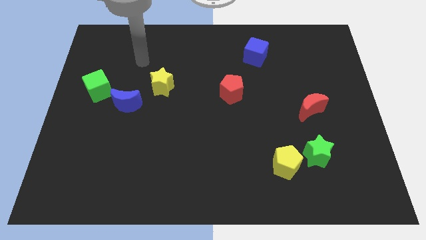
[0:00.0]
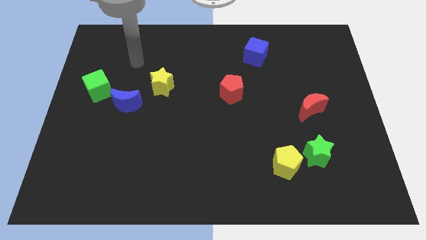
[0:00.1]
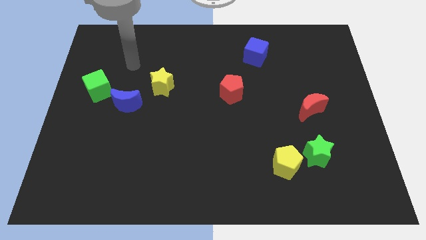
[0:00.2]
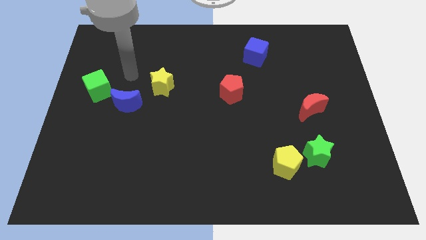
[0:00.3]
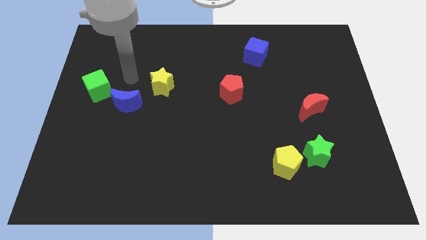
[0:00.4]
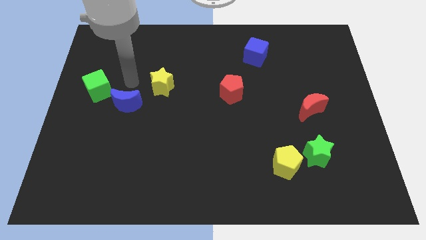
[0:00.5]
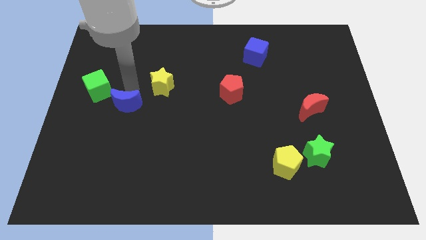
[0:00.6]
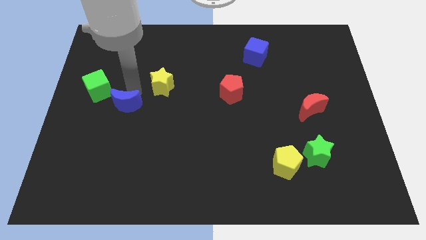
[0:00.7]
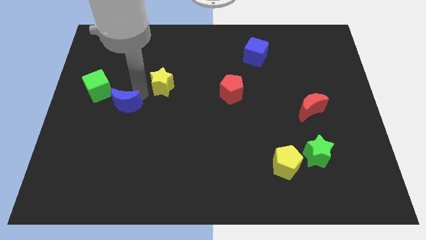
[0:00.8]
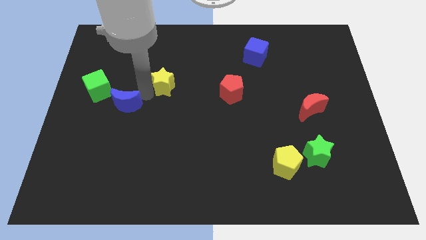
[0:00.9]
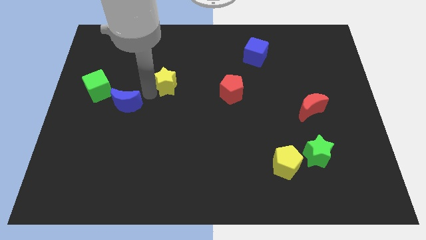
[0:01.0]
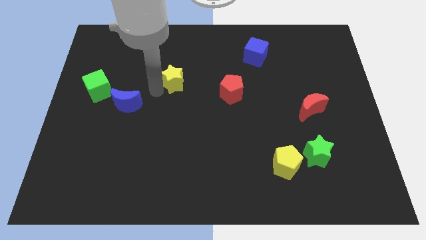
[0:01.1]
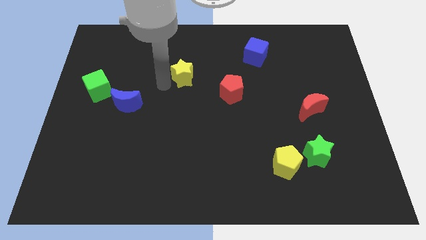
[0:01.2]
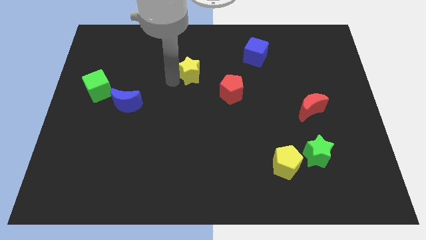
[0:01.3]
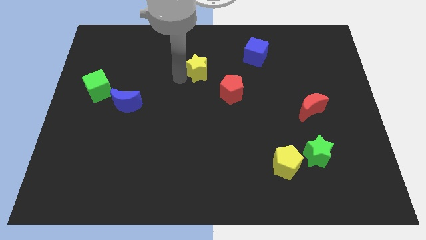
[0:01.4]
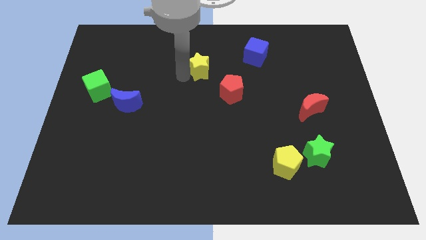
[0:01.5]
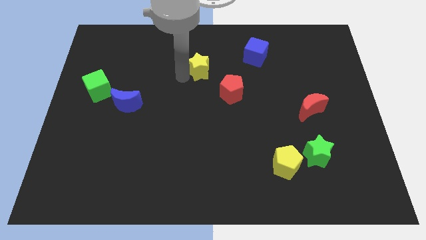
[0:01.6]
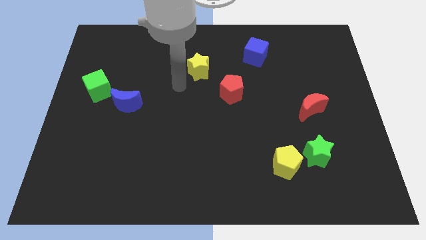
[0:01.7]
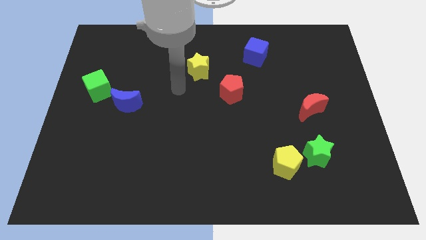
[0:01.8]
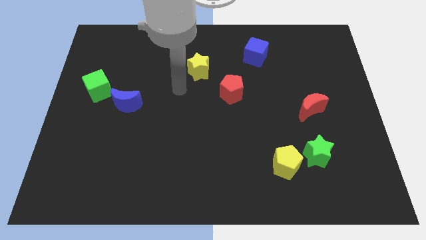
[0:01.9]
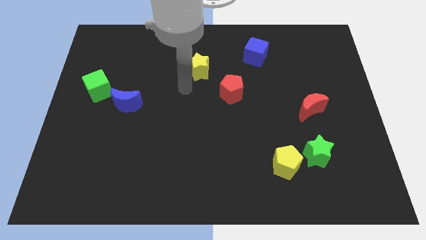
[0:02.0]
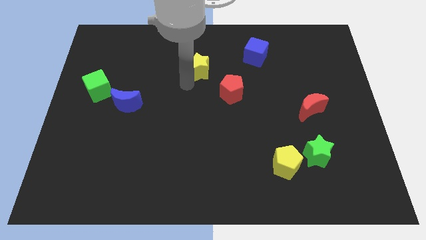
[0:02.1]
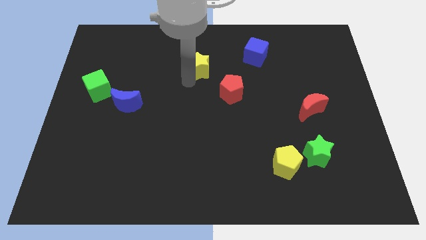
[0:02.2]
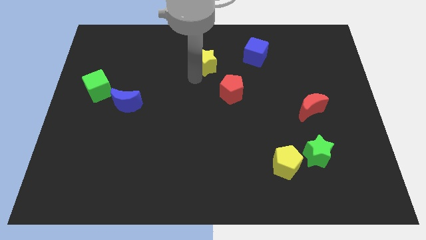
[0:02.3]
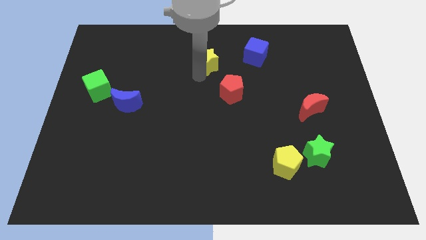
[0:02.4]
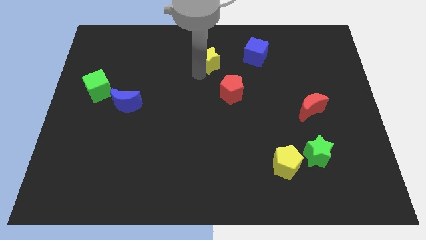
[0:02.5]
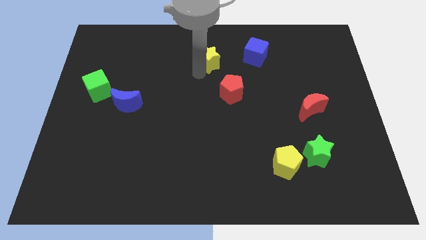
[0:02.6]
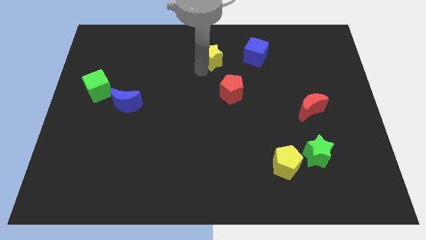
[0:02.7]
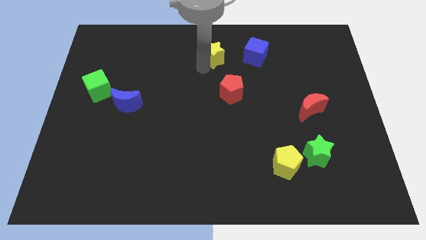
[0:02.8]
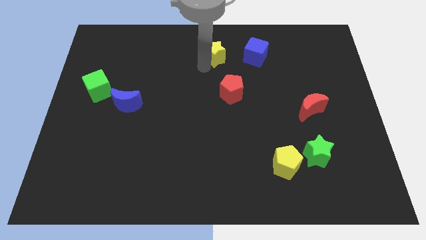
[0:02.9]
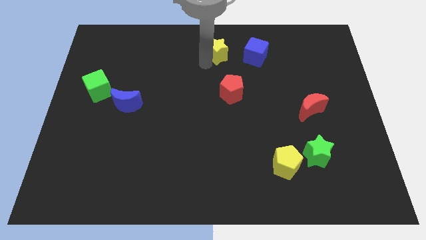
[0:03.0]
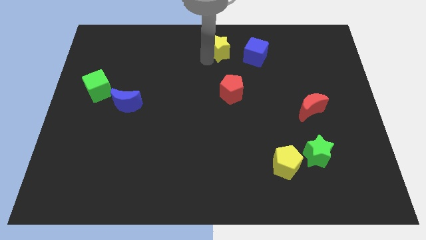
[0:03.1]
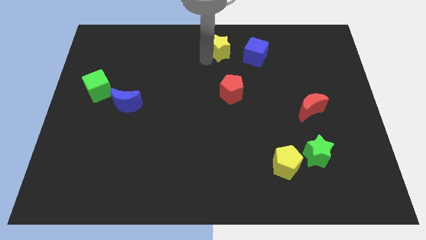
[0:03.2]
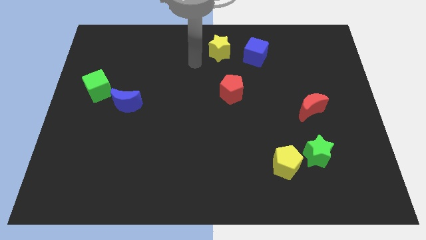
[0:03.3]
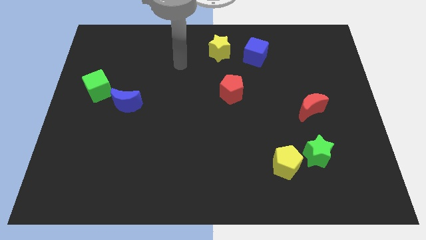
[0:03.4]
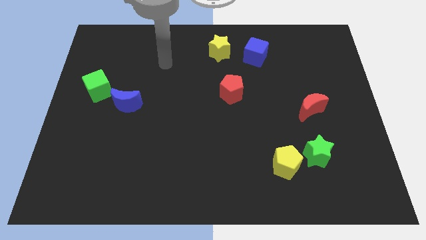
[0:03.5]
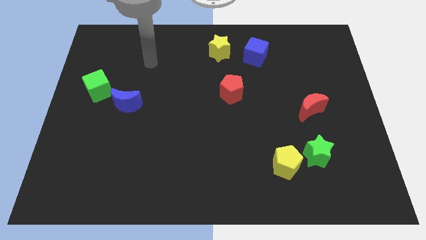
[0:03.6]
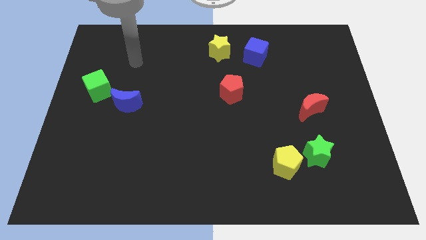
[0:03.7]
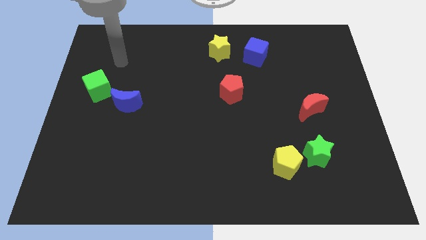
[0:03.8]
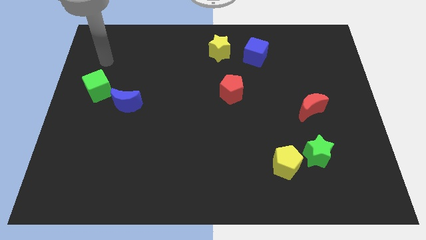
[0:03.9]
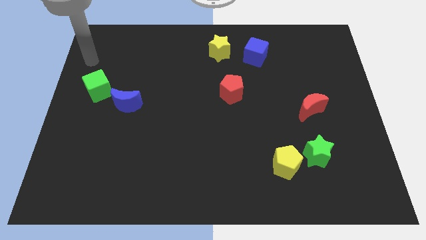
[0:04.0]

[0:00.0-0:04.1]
push yellow star to the left of blue cube

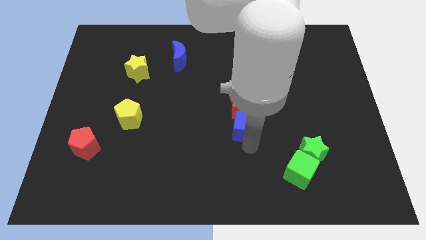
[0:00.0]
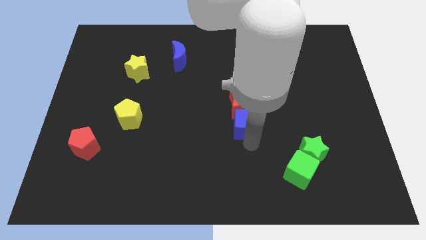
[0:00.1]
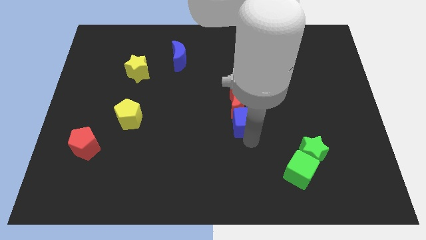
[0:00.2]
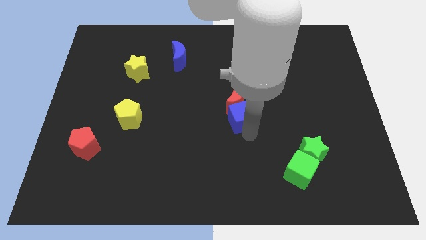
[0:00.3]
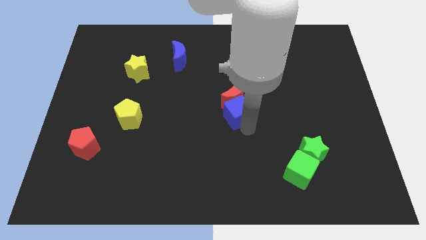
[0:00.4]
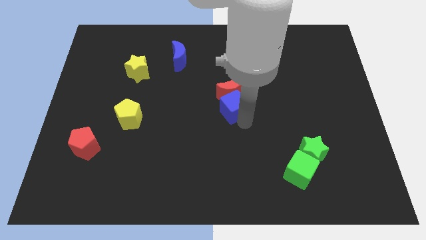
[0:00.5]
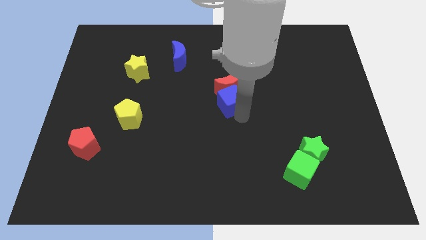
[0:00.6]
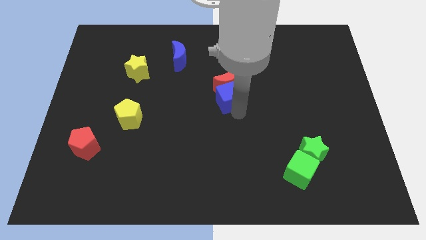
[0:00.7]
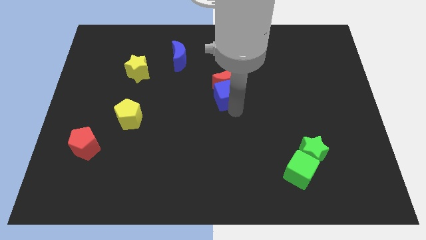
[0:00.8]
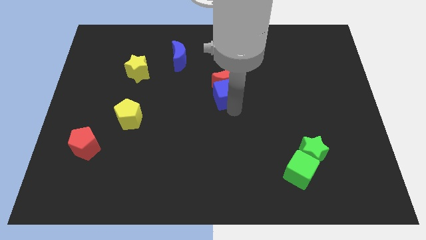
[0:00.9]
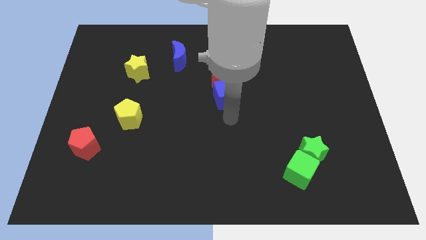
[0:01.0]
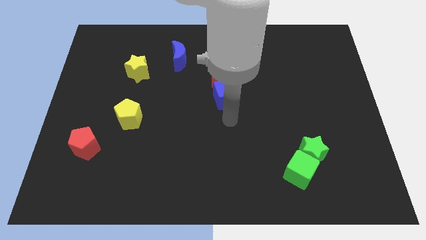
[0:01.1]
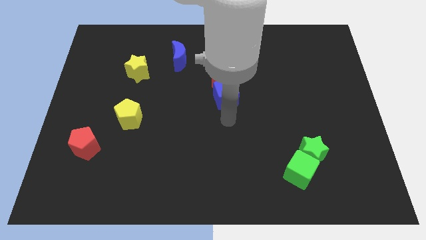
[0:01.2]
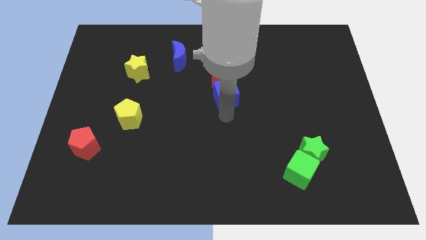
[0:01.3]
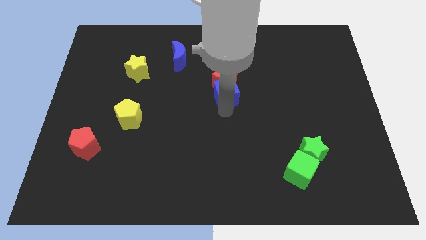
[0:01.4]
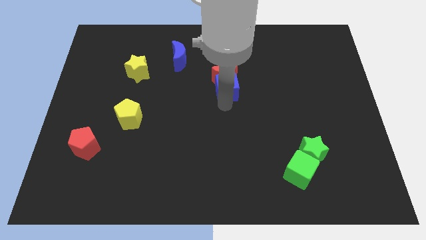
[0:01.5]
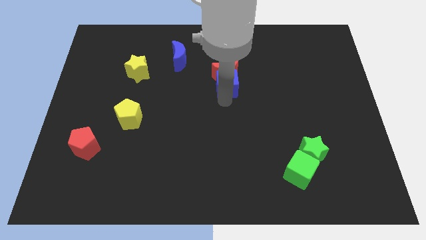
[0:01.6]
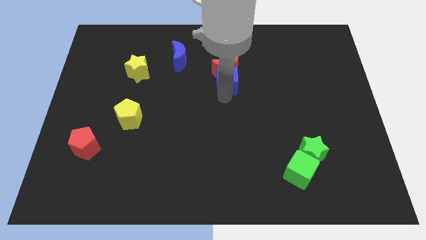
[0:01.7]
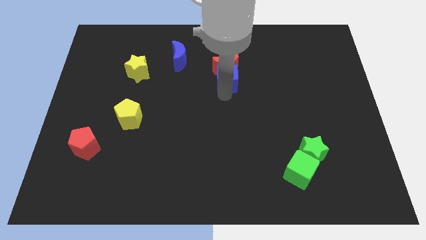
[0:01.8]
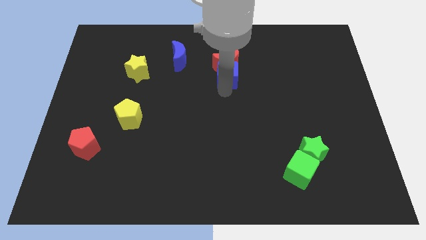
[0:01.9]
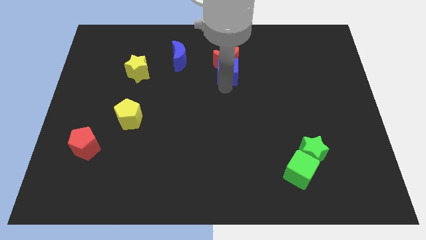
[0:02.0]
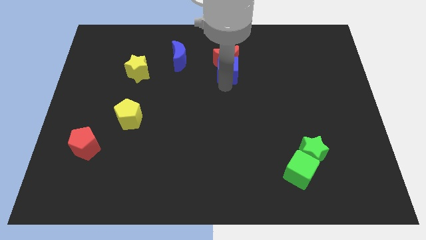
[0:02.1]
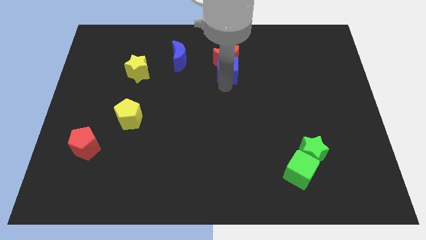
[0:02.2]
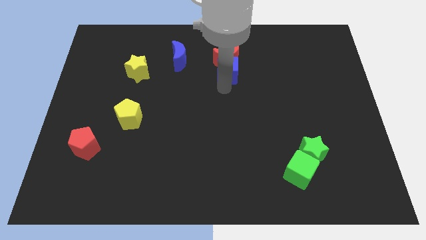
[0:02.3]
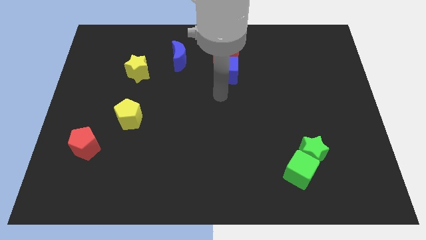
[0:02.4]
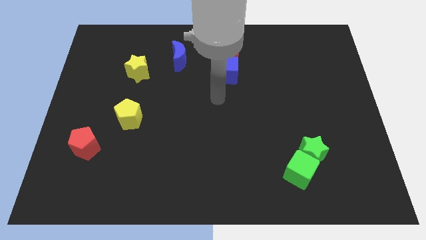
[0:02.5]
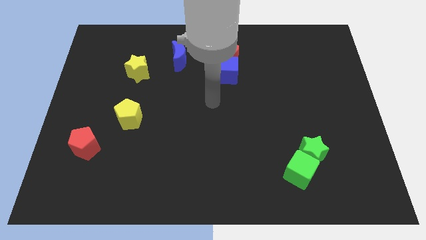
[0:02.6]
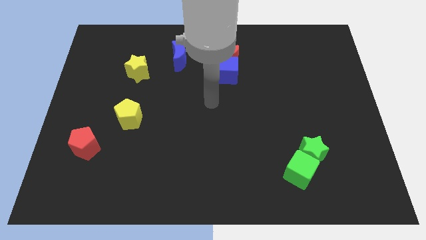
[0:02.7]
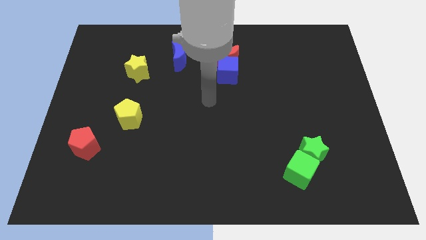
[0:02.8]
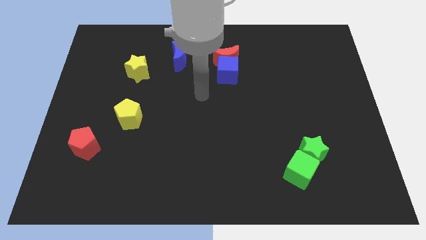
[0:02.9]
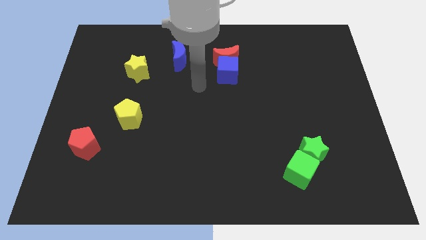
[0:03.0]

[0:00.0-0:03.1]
push the blue cube and red moon upward

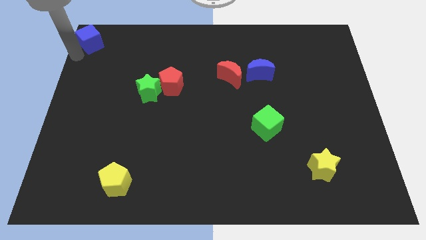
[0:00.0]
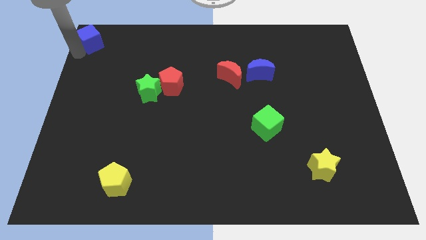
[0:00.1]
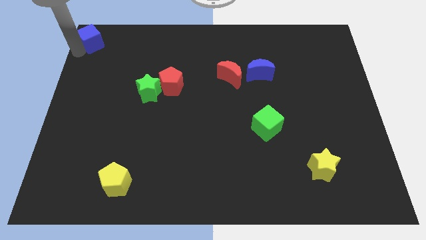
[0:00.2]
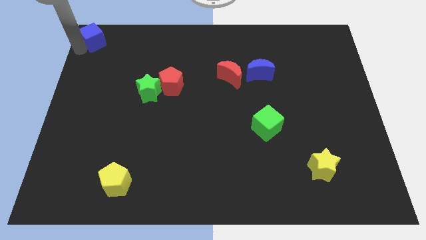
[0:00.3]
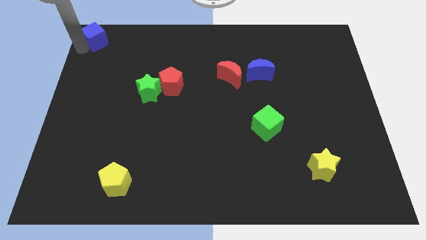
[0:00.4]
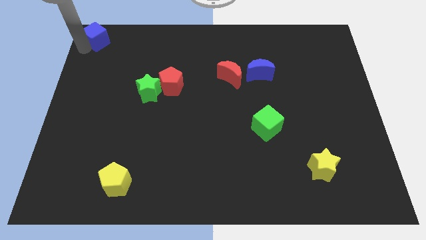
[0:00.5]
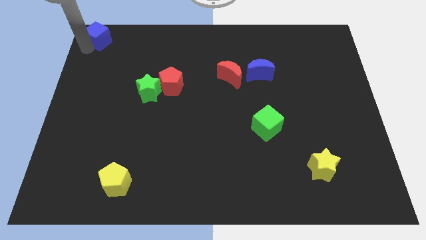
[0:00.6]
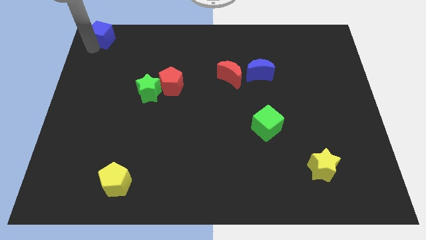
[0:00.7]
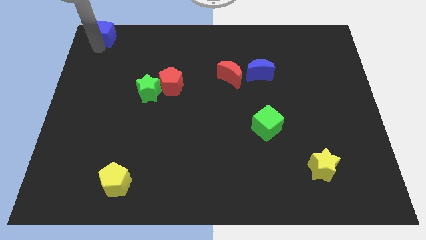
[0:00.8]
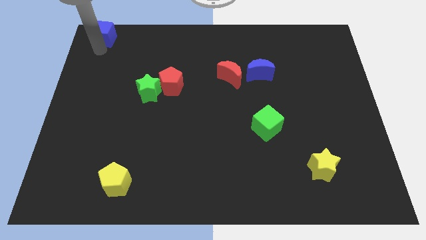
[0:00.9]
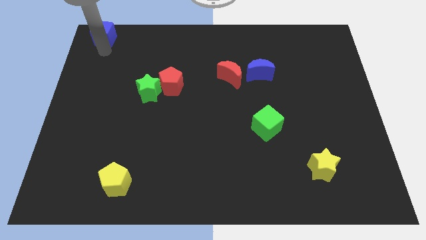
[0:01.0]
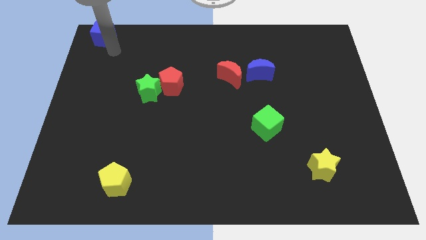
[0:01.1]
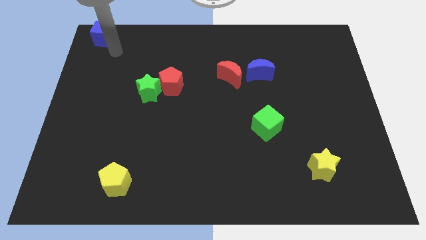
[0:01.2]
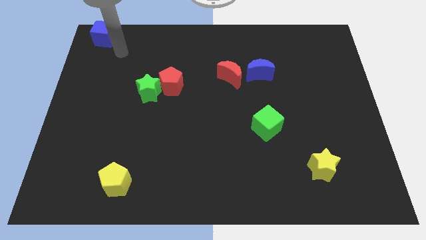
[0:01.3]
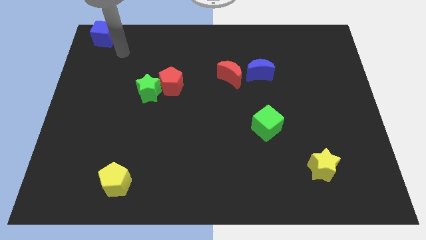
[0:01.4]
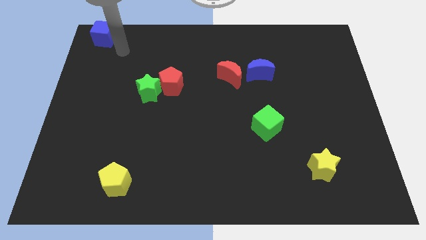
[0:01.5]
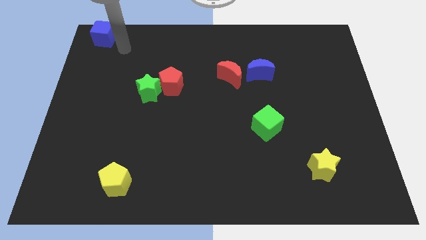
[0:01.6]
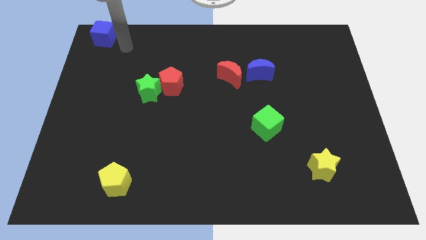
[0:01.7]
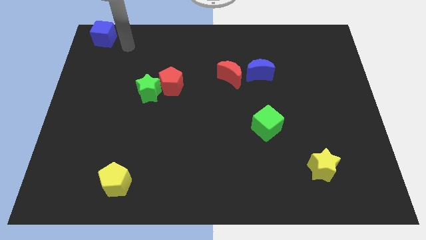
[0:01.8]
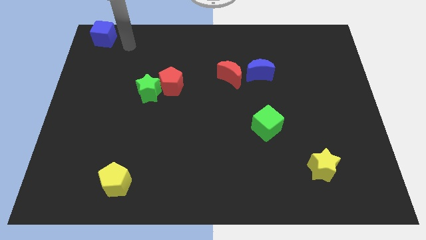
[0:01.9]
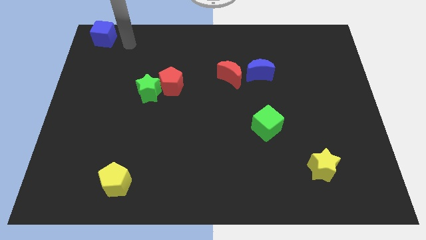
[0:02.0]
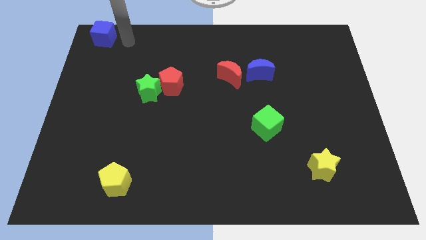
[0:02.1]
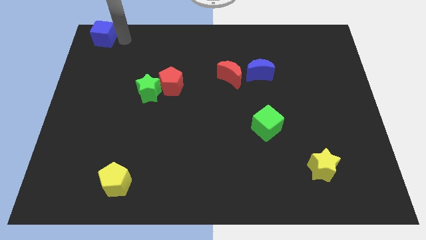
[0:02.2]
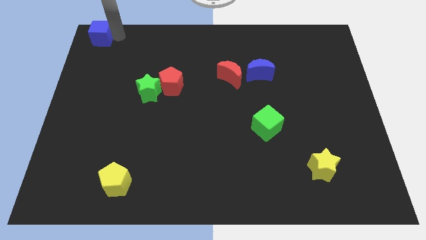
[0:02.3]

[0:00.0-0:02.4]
move your arm towards the right side of the blue cube
